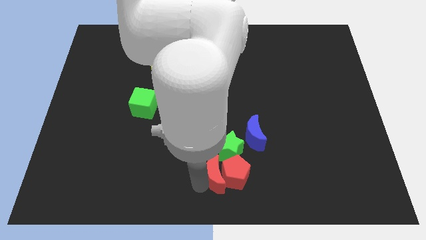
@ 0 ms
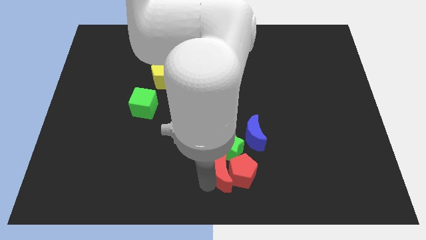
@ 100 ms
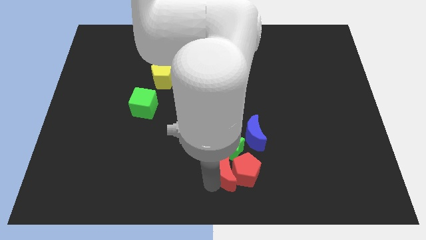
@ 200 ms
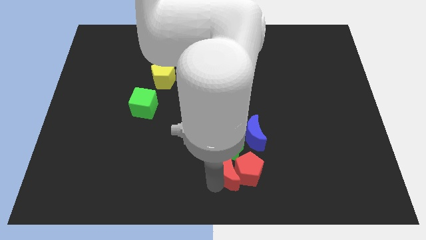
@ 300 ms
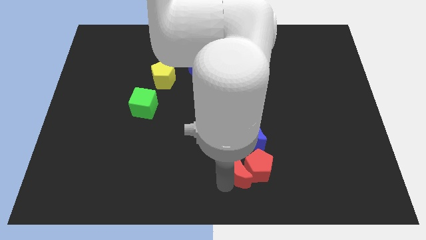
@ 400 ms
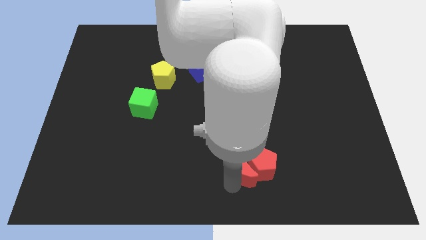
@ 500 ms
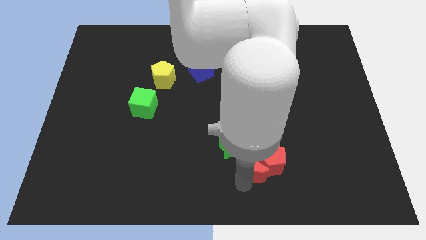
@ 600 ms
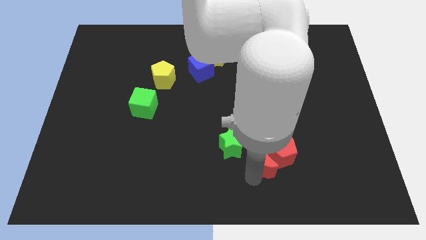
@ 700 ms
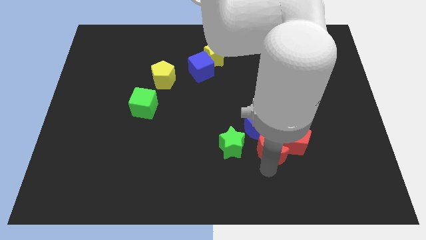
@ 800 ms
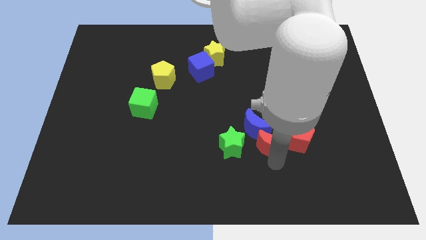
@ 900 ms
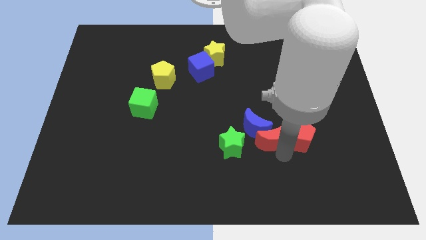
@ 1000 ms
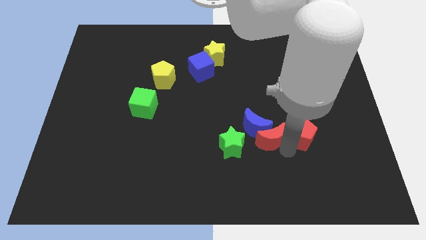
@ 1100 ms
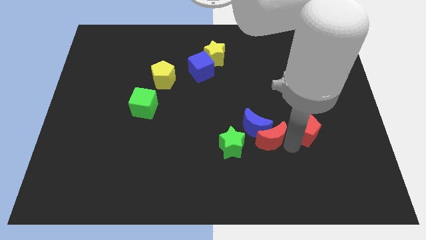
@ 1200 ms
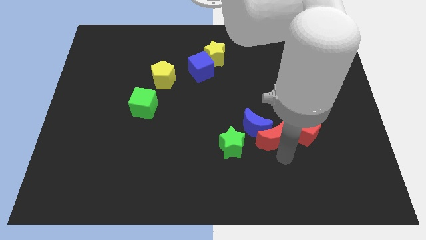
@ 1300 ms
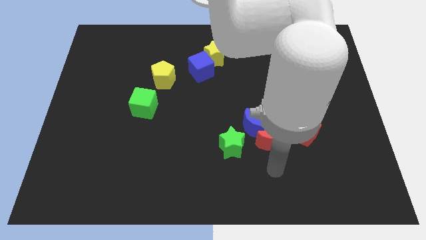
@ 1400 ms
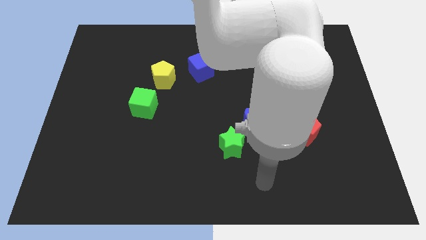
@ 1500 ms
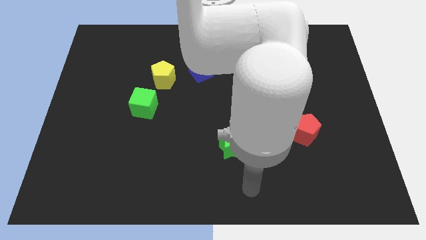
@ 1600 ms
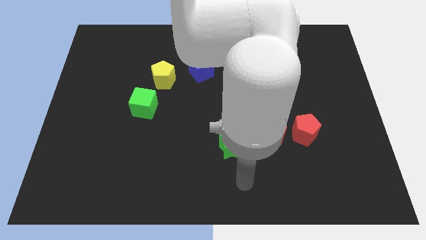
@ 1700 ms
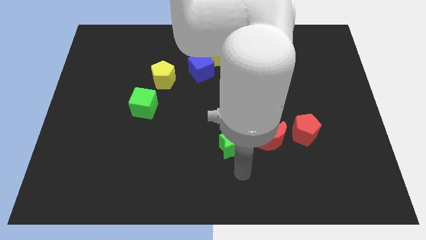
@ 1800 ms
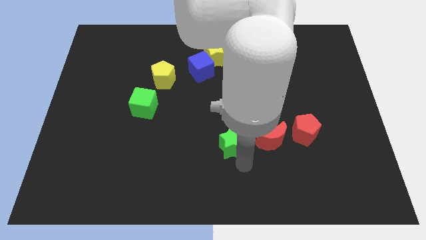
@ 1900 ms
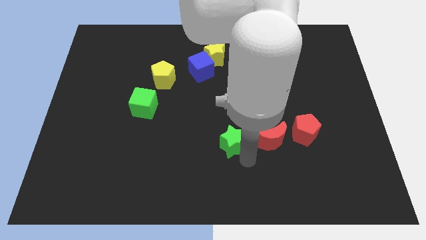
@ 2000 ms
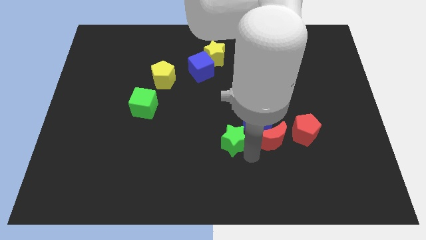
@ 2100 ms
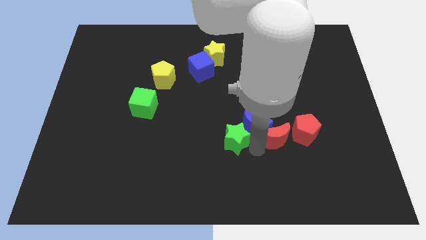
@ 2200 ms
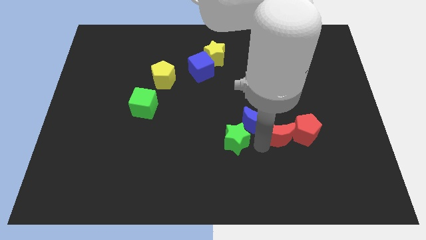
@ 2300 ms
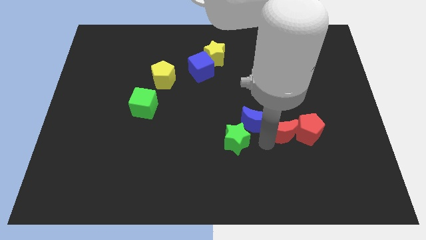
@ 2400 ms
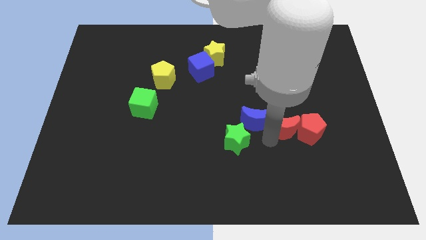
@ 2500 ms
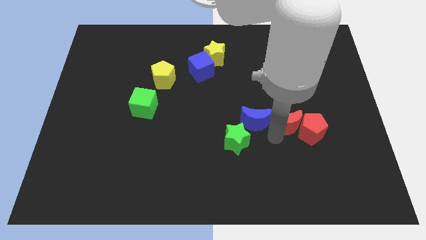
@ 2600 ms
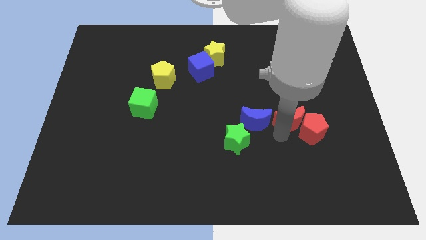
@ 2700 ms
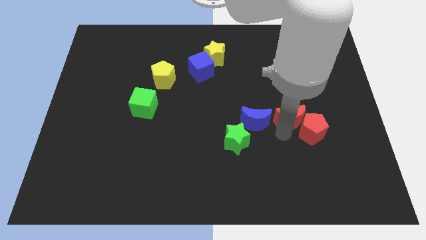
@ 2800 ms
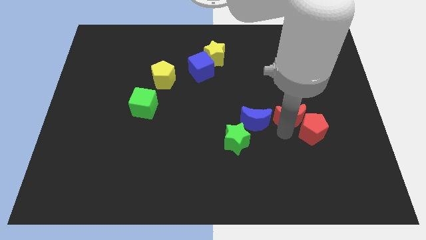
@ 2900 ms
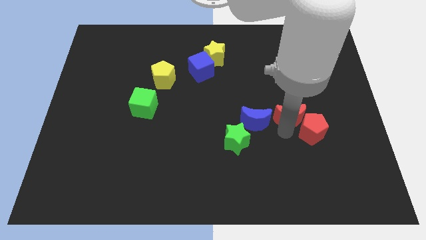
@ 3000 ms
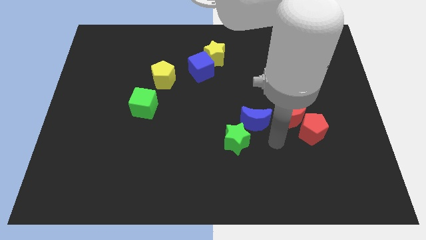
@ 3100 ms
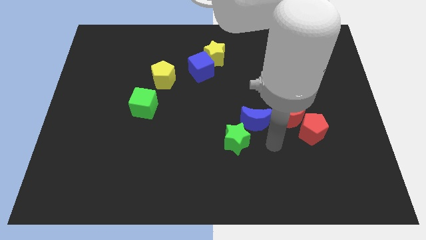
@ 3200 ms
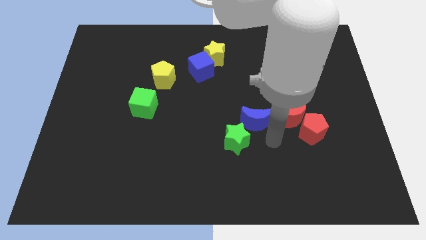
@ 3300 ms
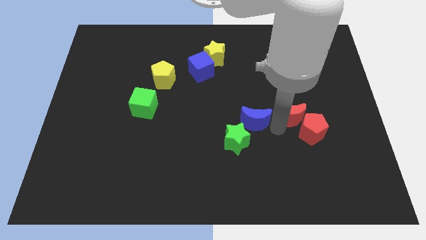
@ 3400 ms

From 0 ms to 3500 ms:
push the red pentagon with red moon

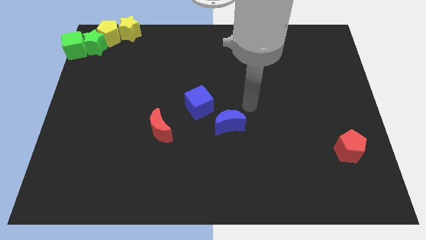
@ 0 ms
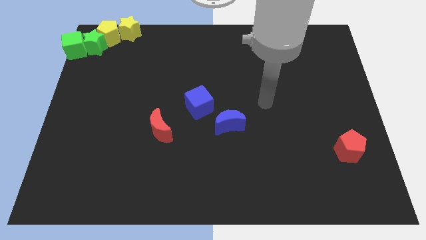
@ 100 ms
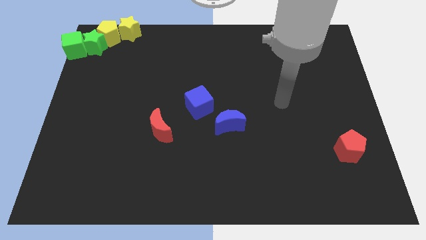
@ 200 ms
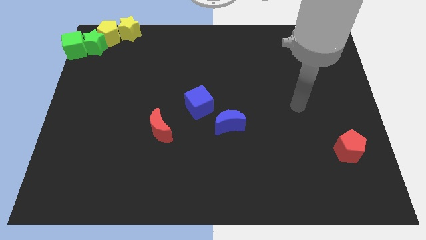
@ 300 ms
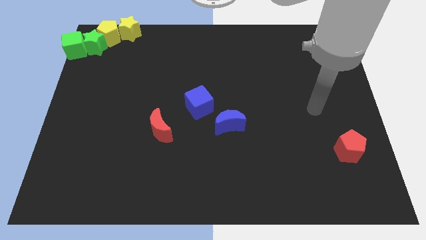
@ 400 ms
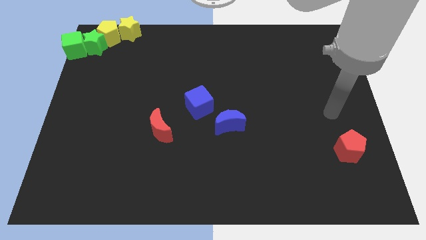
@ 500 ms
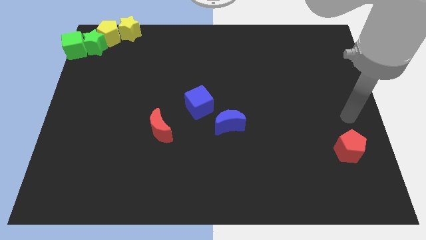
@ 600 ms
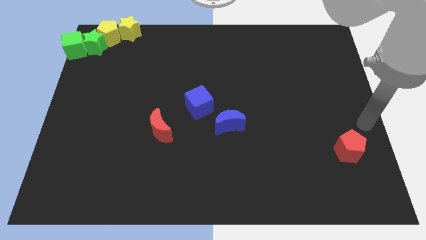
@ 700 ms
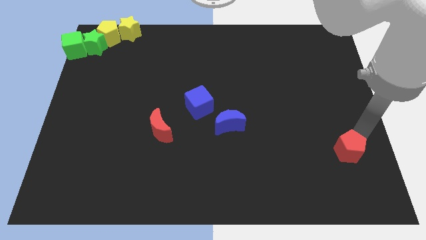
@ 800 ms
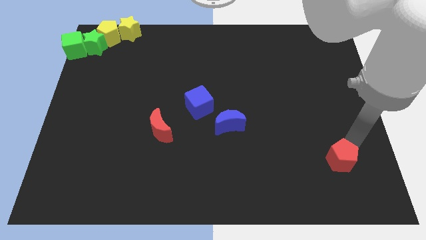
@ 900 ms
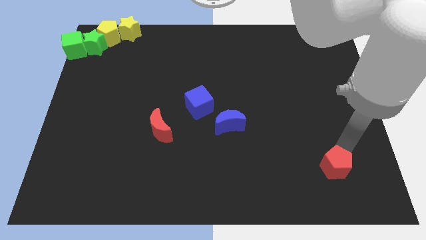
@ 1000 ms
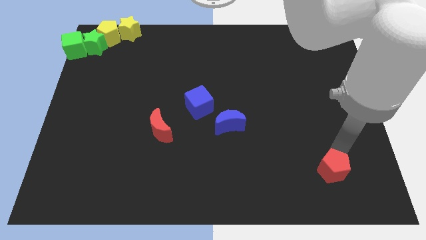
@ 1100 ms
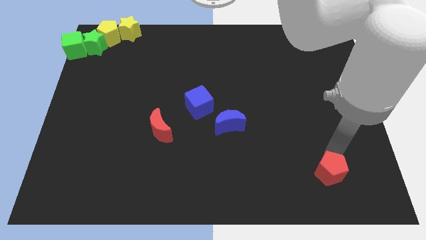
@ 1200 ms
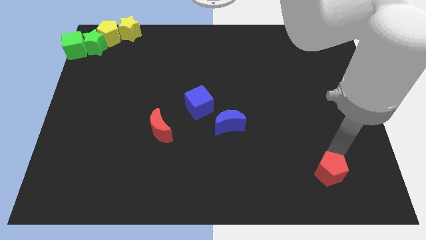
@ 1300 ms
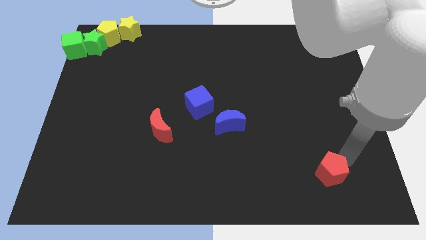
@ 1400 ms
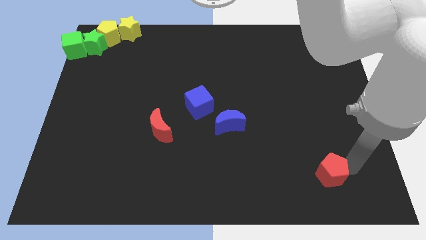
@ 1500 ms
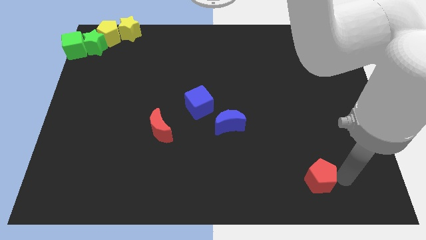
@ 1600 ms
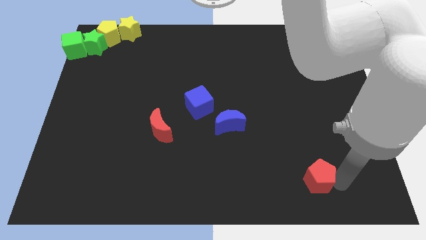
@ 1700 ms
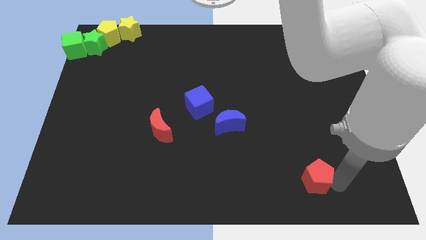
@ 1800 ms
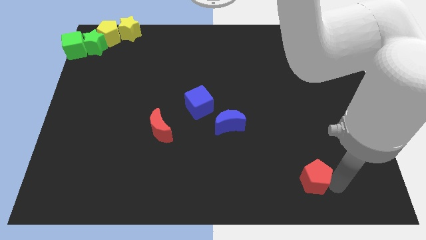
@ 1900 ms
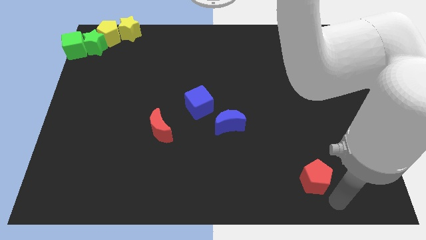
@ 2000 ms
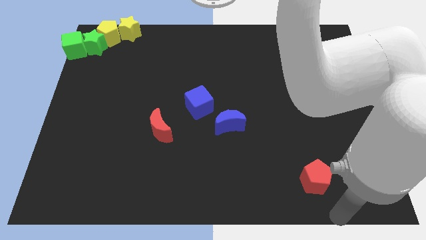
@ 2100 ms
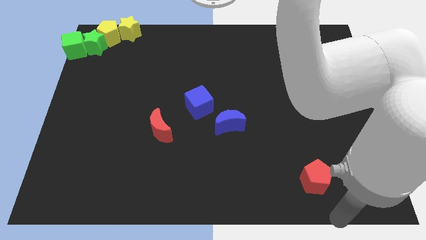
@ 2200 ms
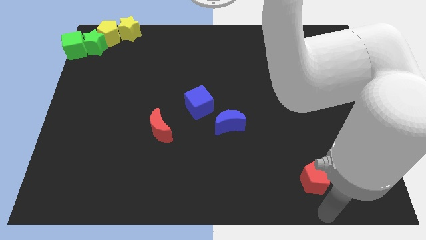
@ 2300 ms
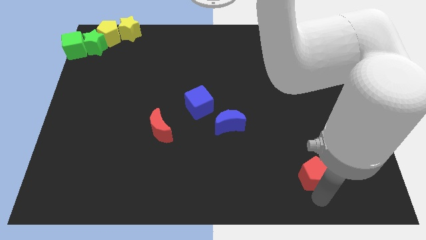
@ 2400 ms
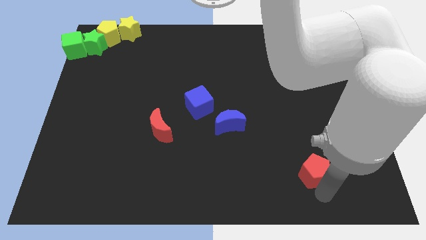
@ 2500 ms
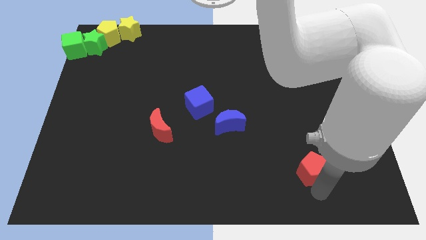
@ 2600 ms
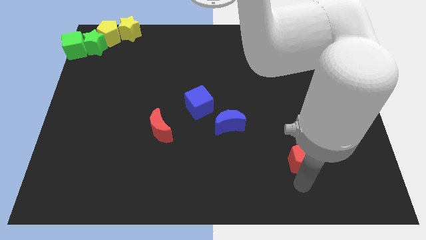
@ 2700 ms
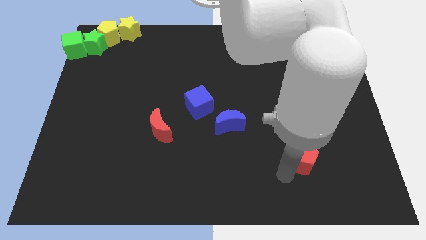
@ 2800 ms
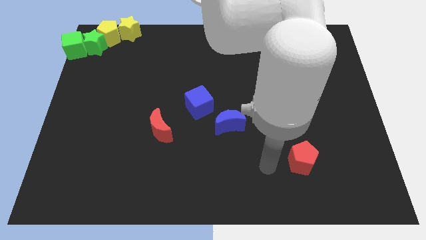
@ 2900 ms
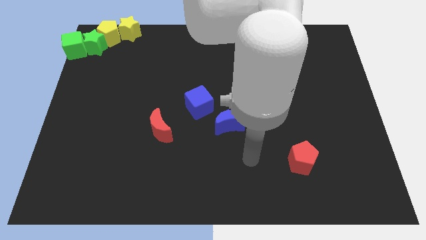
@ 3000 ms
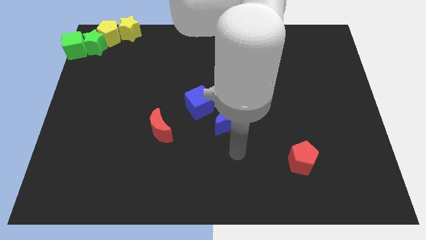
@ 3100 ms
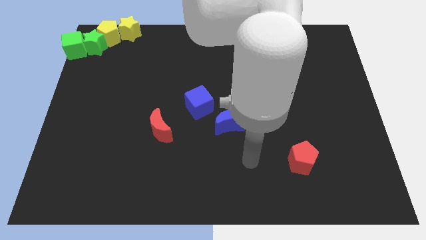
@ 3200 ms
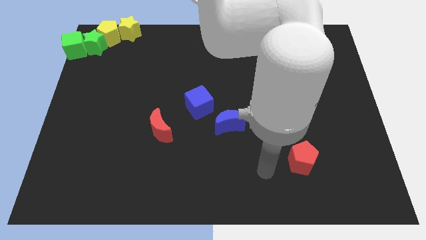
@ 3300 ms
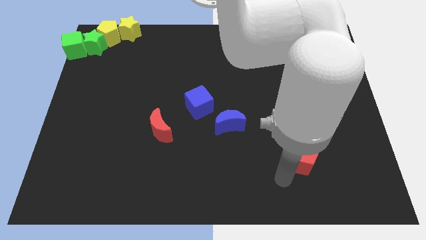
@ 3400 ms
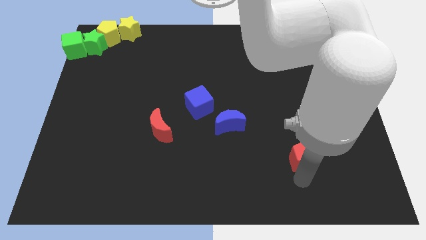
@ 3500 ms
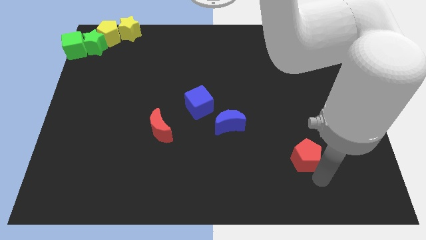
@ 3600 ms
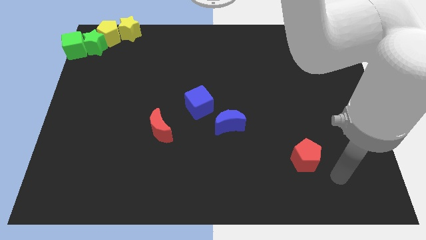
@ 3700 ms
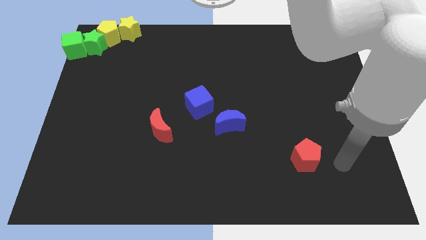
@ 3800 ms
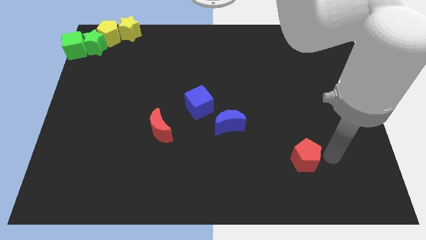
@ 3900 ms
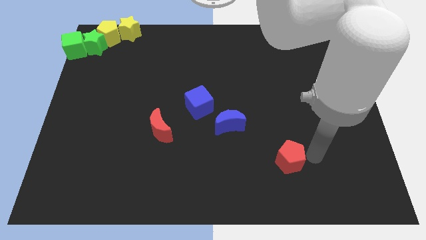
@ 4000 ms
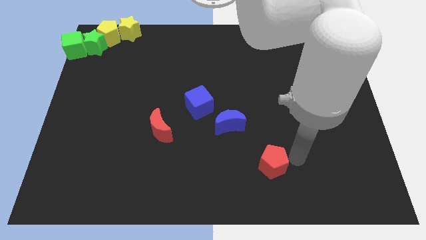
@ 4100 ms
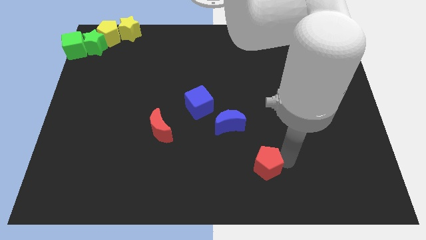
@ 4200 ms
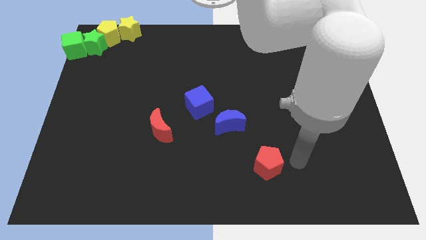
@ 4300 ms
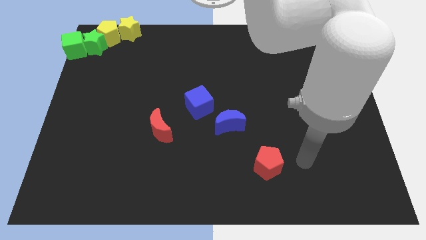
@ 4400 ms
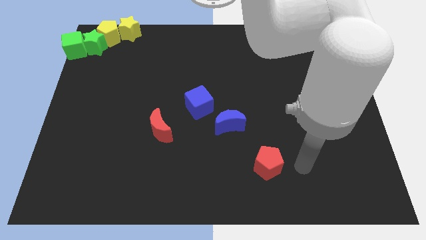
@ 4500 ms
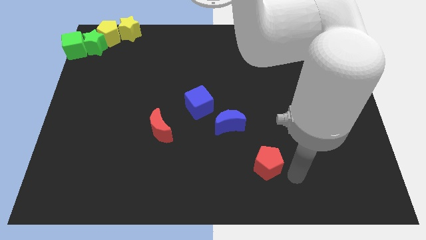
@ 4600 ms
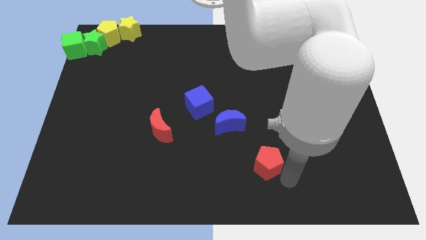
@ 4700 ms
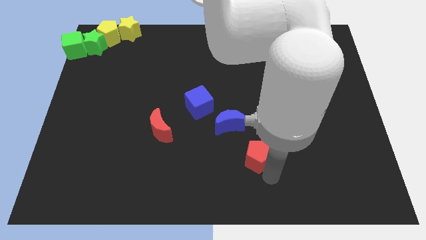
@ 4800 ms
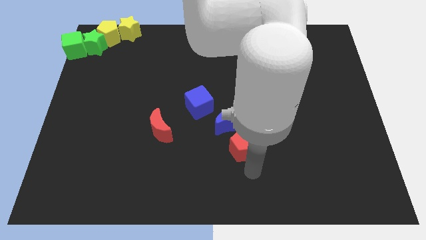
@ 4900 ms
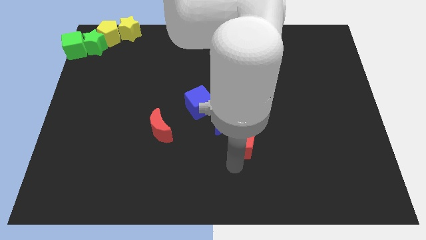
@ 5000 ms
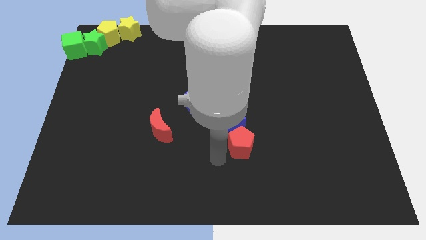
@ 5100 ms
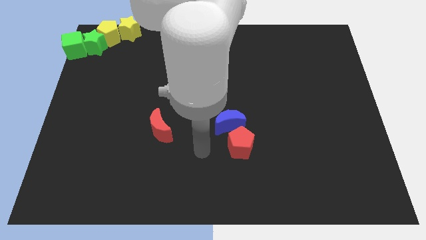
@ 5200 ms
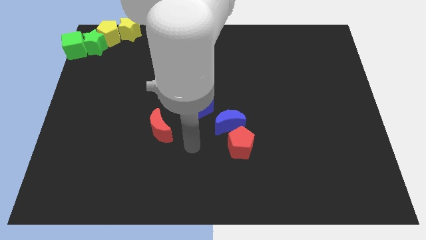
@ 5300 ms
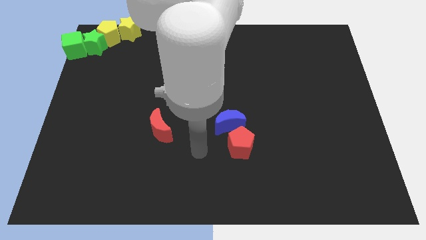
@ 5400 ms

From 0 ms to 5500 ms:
push the red pentagon to the bottom of the blue crescent

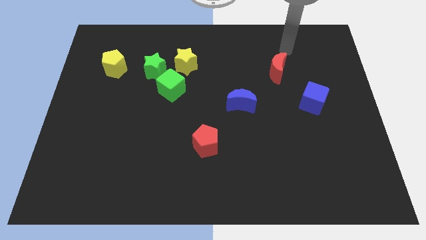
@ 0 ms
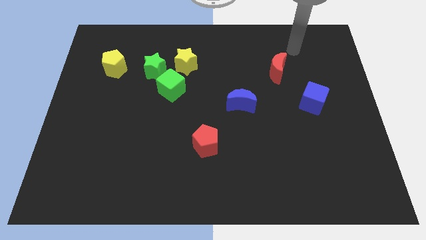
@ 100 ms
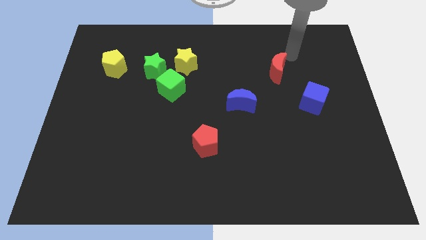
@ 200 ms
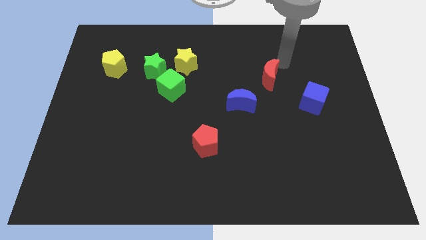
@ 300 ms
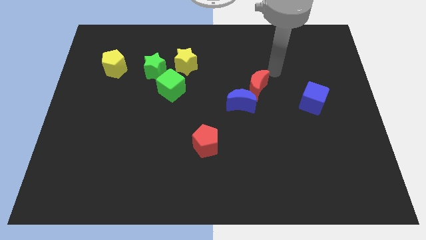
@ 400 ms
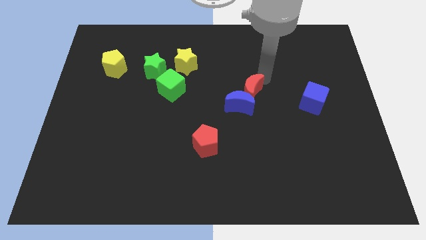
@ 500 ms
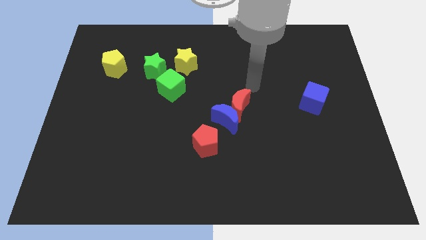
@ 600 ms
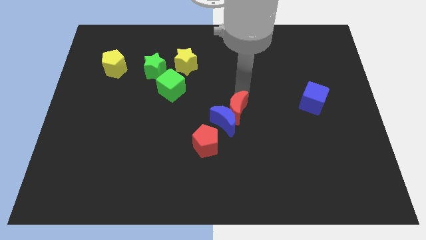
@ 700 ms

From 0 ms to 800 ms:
push the red moon into the blue moon
